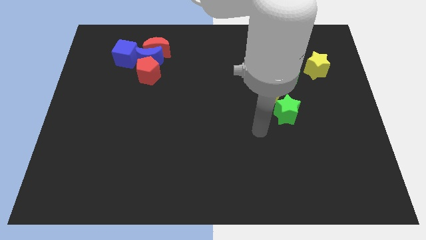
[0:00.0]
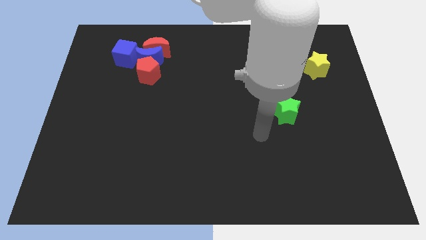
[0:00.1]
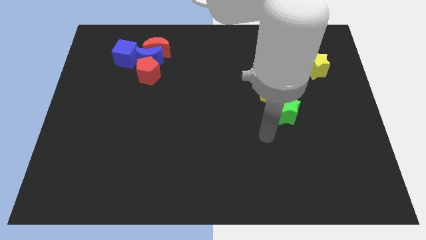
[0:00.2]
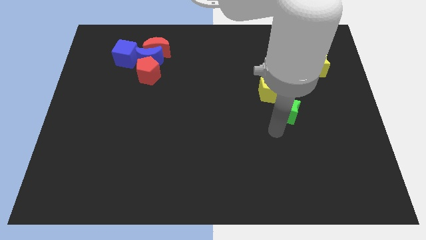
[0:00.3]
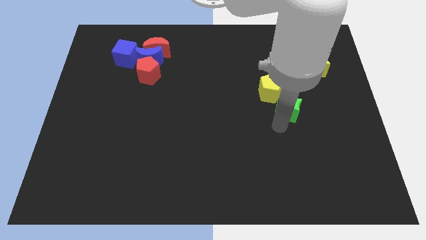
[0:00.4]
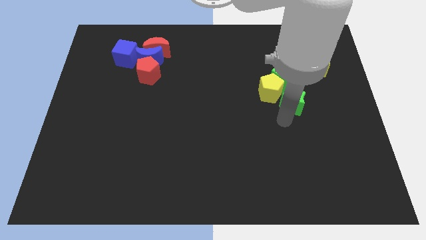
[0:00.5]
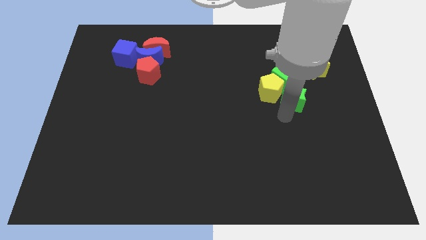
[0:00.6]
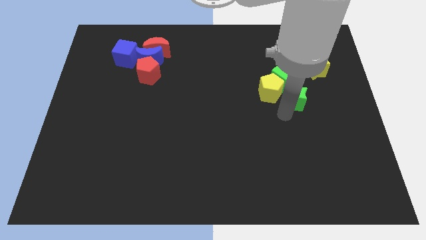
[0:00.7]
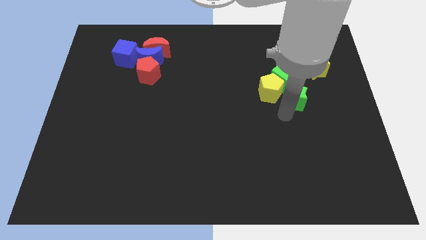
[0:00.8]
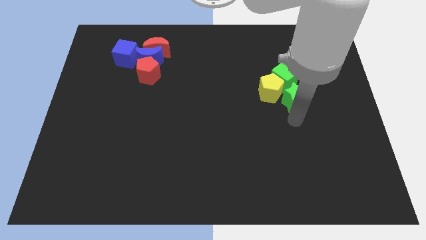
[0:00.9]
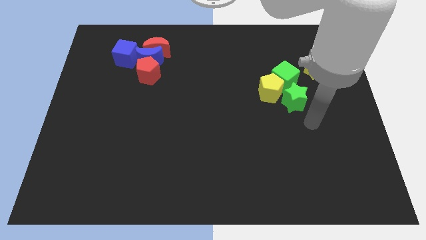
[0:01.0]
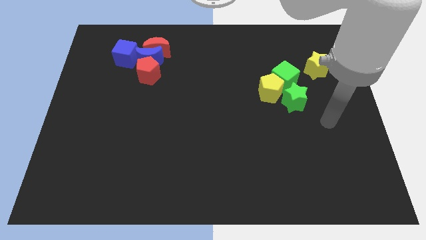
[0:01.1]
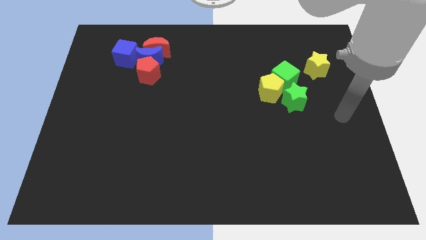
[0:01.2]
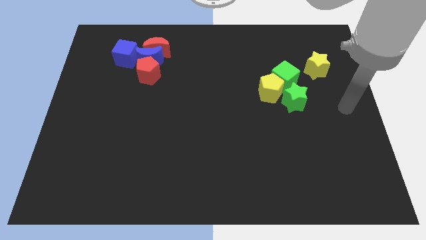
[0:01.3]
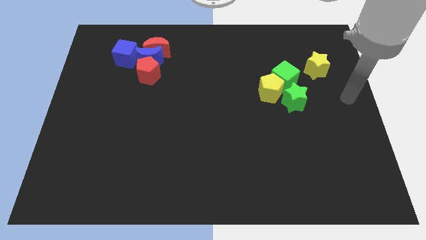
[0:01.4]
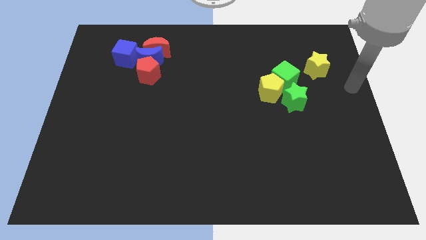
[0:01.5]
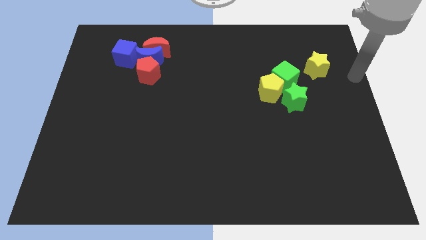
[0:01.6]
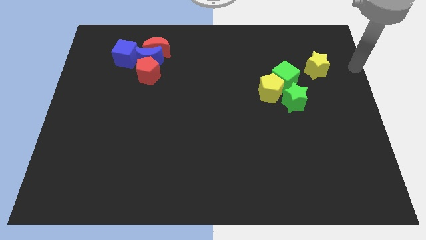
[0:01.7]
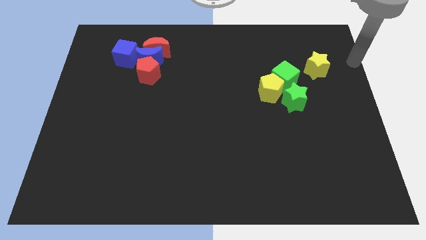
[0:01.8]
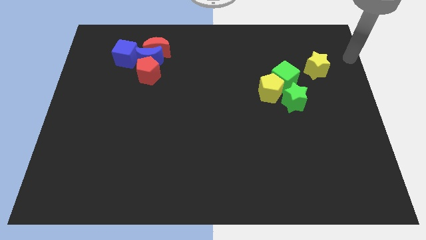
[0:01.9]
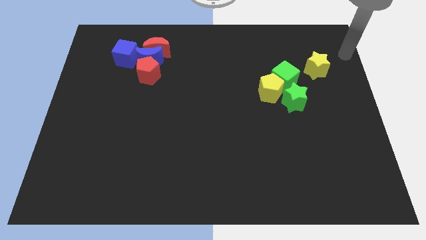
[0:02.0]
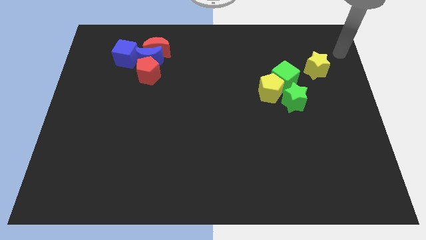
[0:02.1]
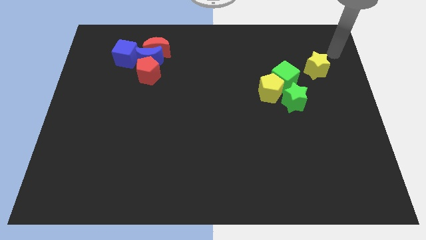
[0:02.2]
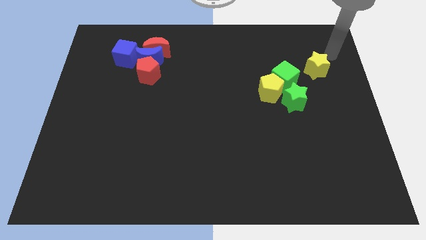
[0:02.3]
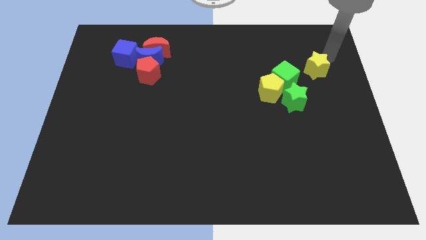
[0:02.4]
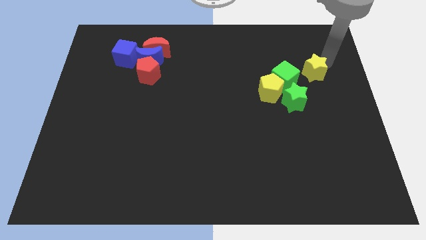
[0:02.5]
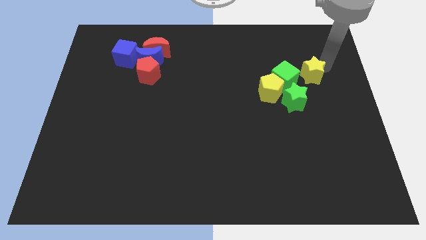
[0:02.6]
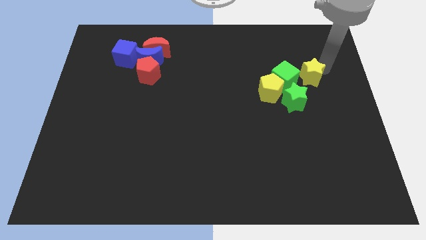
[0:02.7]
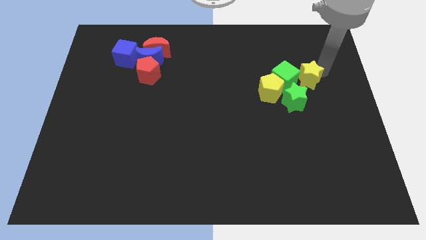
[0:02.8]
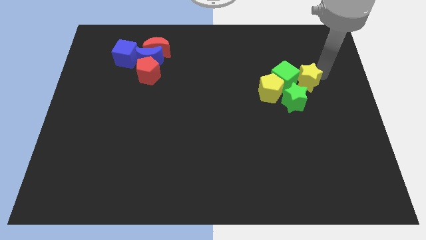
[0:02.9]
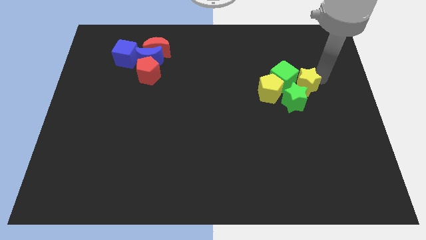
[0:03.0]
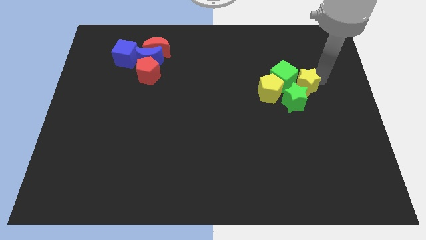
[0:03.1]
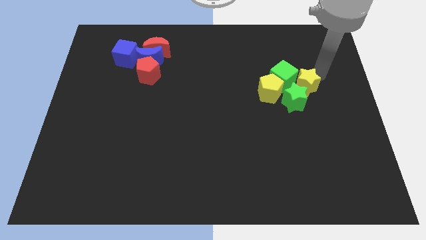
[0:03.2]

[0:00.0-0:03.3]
push green star and yellow star in the group of yellow and green blocks

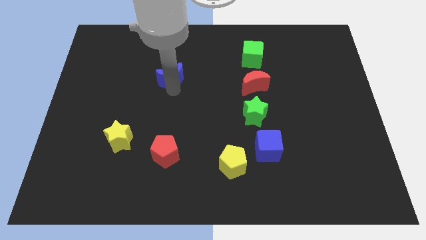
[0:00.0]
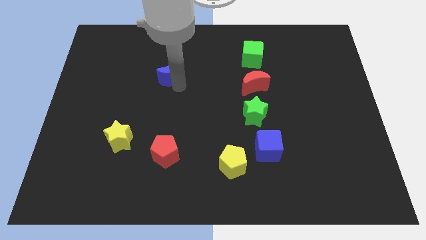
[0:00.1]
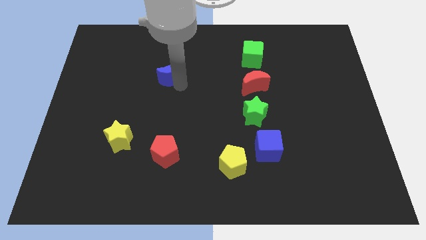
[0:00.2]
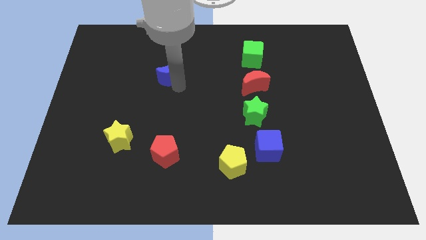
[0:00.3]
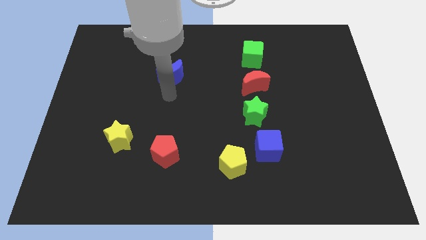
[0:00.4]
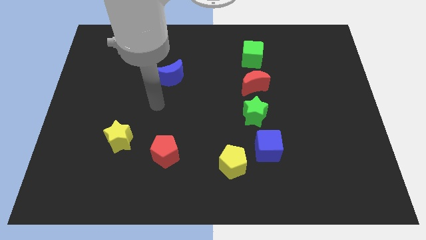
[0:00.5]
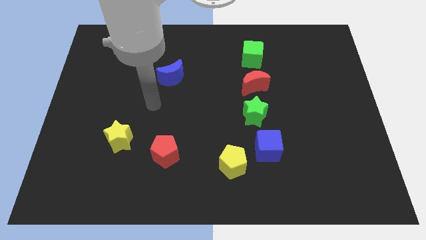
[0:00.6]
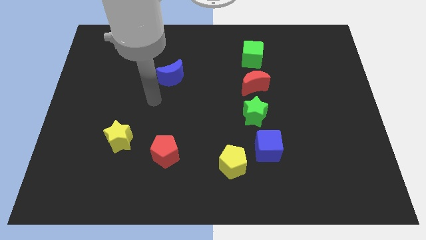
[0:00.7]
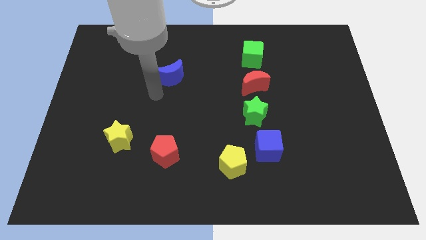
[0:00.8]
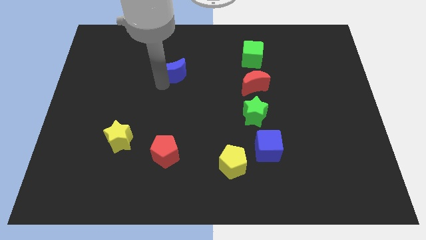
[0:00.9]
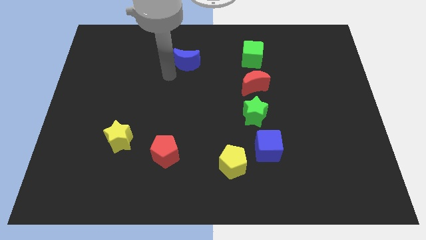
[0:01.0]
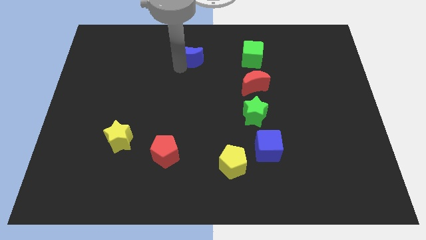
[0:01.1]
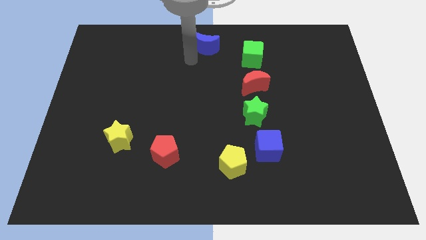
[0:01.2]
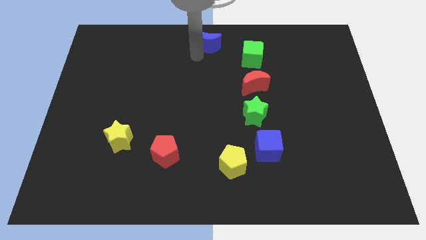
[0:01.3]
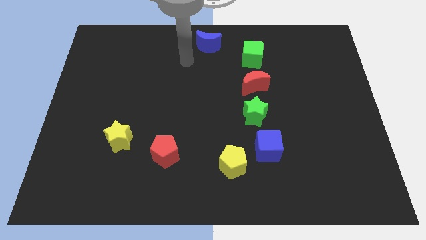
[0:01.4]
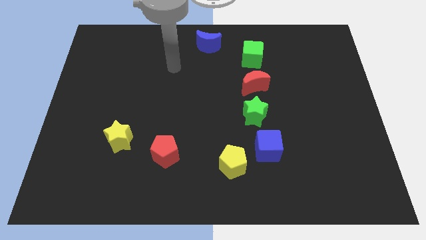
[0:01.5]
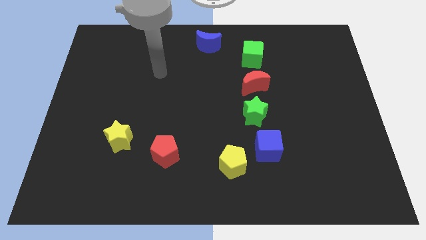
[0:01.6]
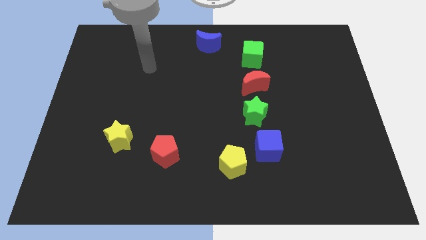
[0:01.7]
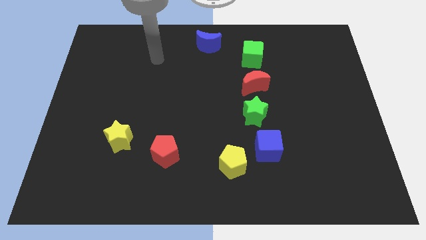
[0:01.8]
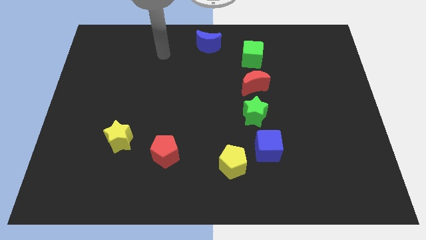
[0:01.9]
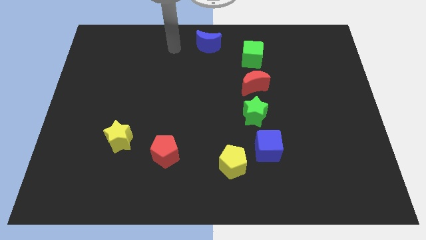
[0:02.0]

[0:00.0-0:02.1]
push the blue moon towards the top center

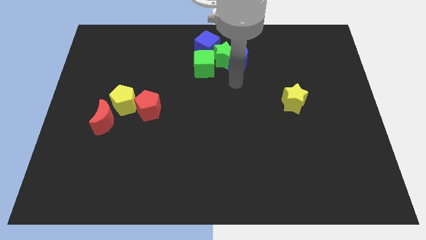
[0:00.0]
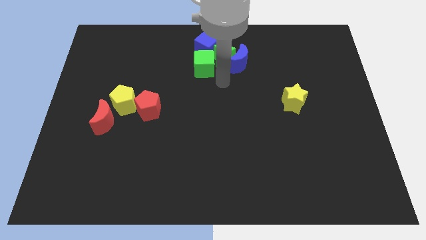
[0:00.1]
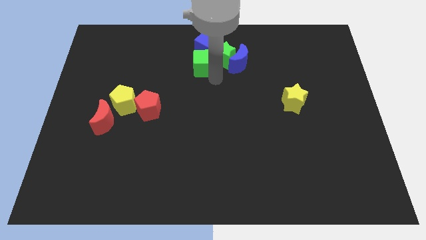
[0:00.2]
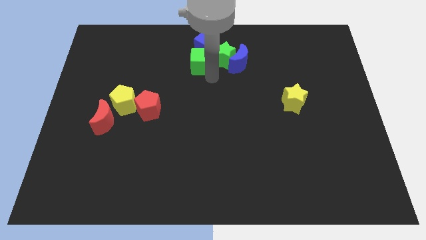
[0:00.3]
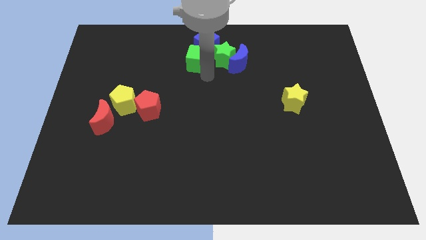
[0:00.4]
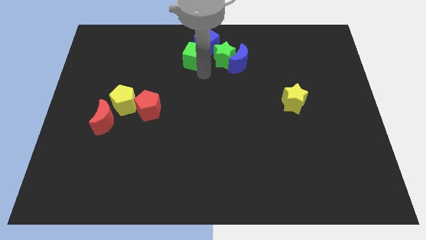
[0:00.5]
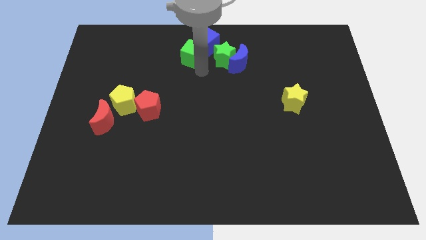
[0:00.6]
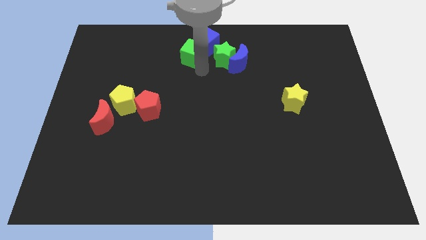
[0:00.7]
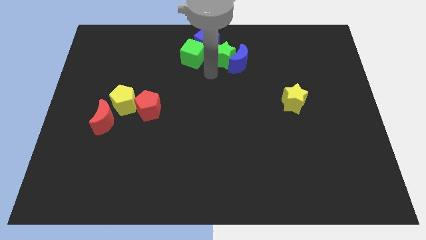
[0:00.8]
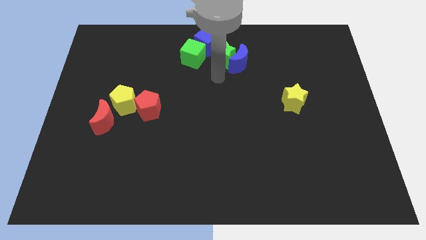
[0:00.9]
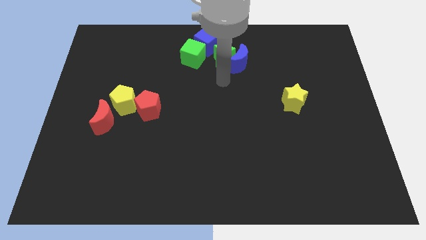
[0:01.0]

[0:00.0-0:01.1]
place the green cube to the bottom left side of the blue cube

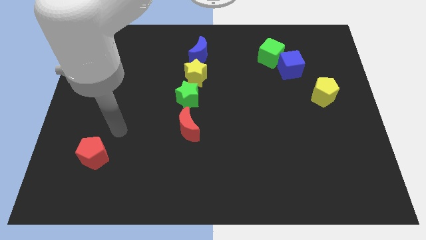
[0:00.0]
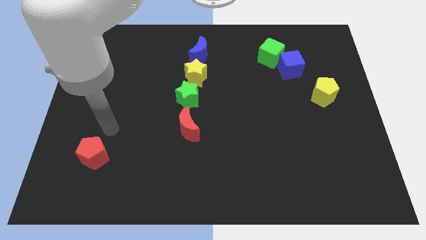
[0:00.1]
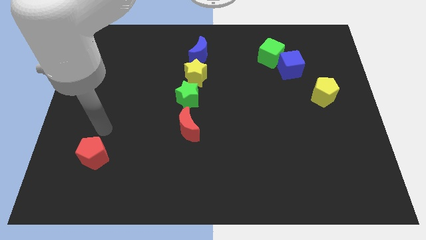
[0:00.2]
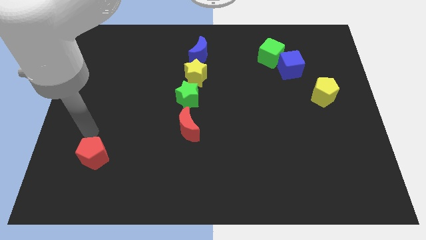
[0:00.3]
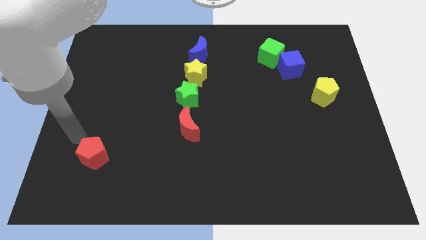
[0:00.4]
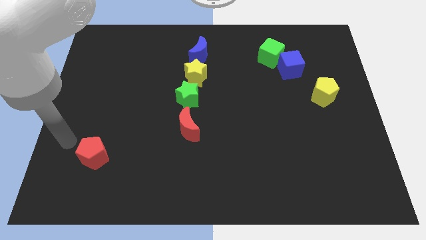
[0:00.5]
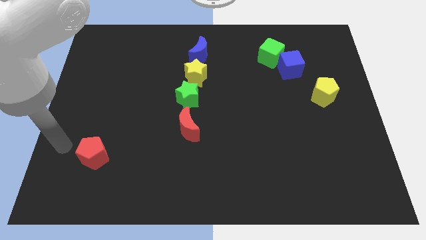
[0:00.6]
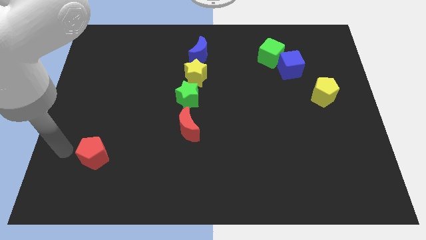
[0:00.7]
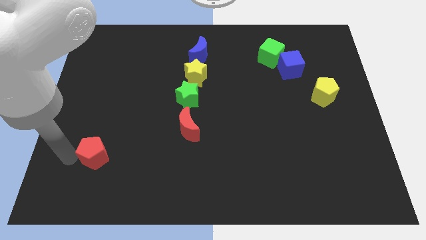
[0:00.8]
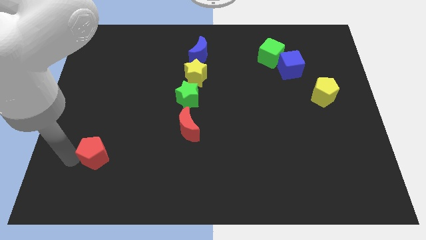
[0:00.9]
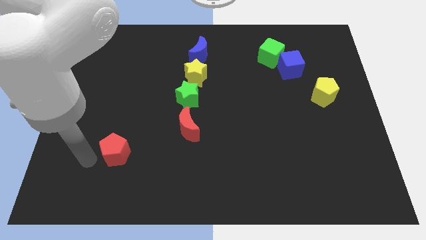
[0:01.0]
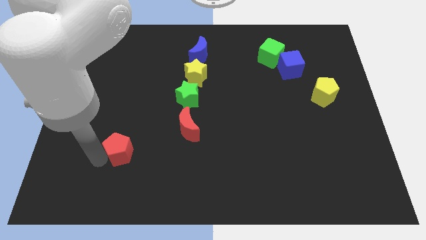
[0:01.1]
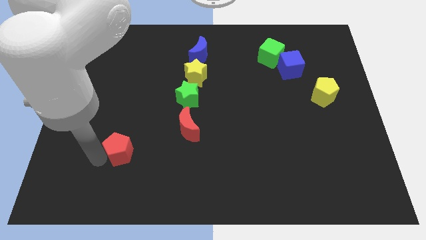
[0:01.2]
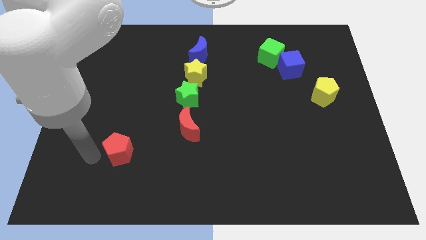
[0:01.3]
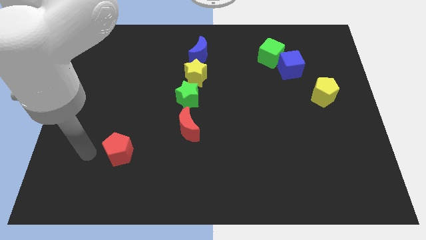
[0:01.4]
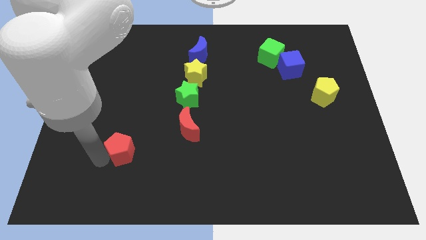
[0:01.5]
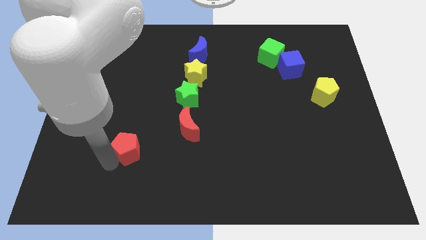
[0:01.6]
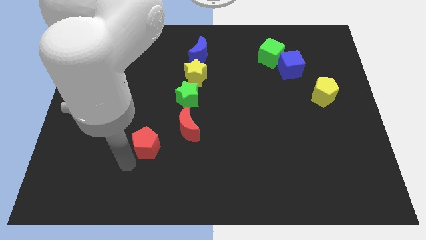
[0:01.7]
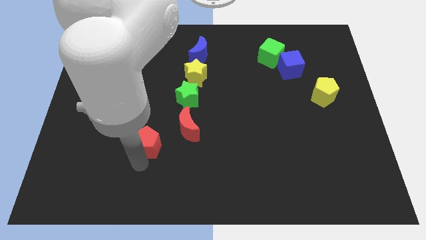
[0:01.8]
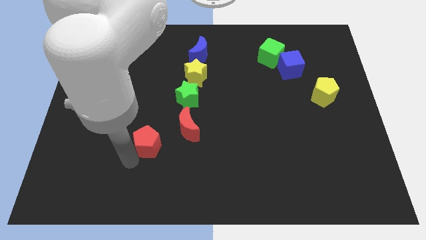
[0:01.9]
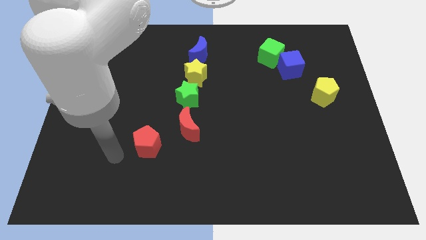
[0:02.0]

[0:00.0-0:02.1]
push red pentagon towards red moon

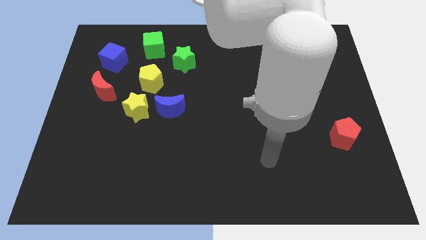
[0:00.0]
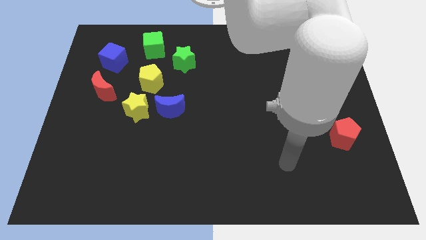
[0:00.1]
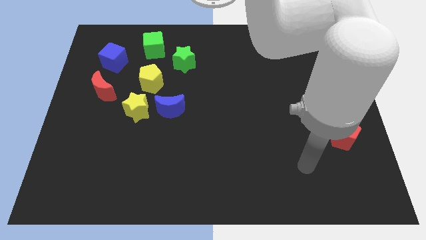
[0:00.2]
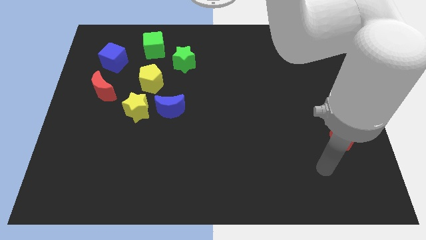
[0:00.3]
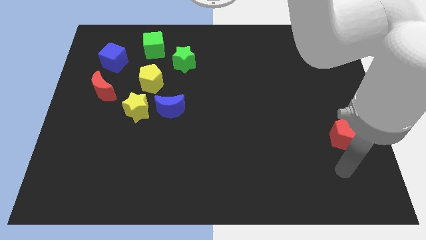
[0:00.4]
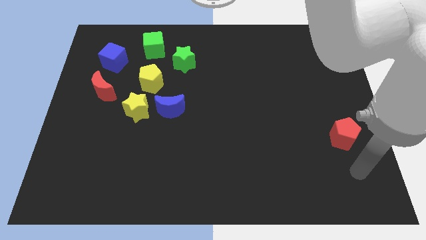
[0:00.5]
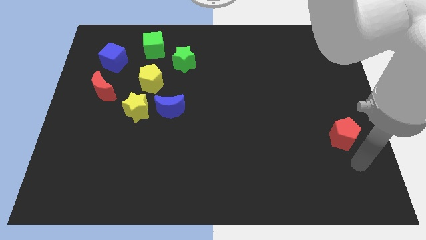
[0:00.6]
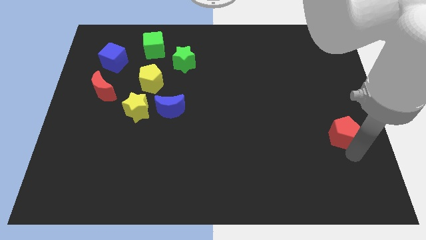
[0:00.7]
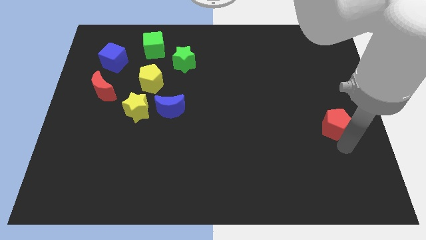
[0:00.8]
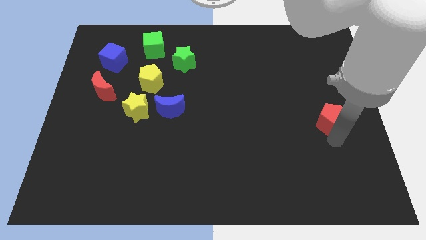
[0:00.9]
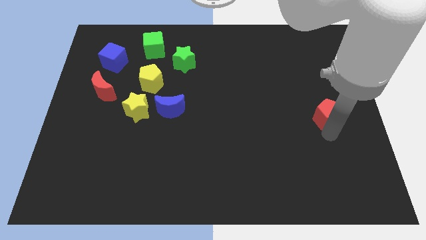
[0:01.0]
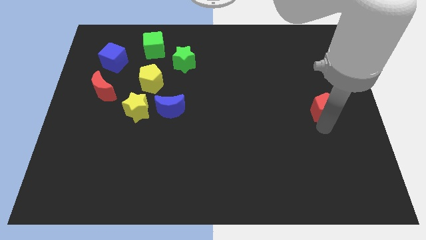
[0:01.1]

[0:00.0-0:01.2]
slide the red pentagon slightly upwards
